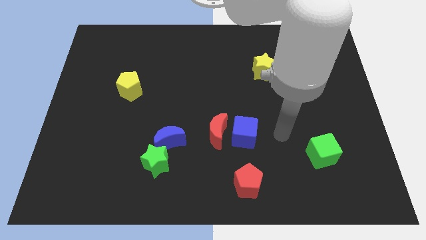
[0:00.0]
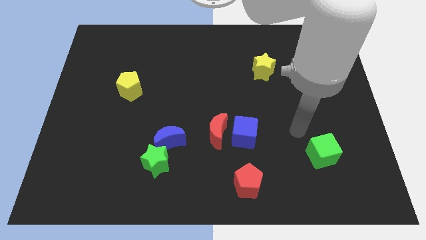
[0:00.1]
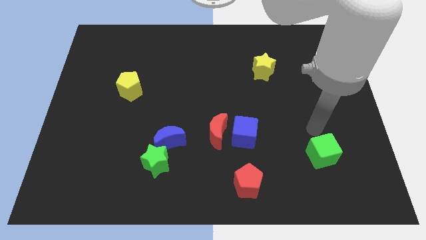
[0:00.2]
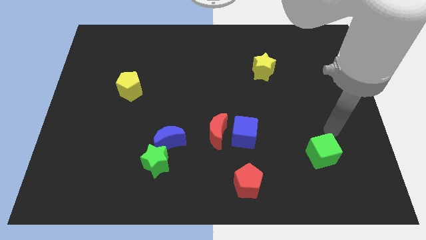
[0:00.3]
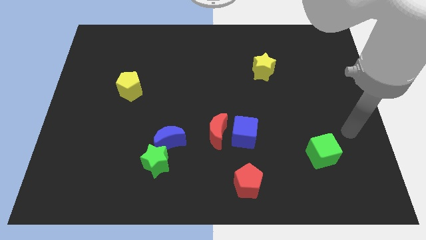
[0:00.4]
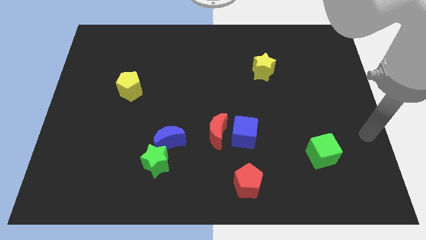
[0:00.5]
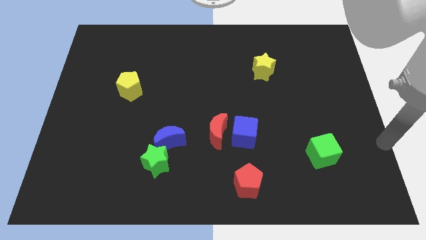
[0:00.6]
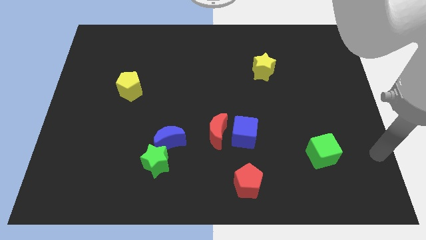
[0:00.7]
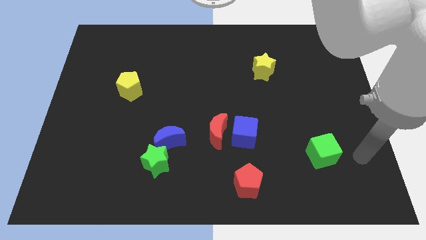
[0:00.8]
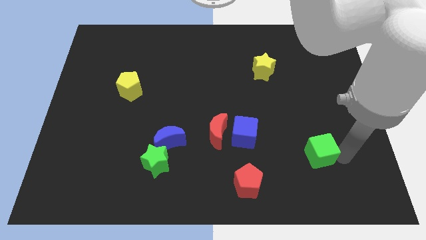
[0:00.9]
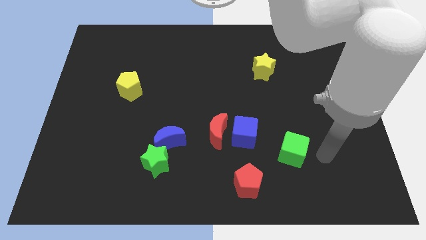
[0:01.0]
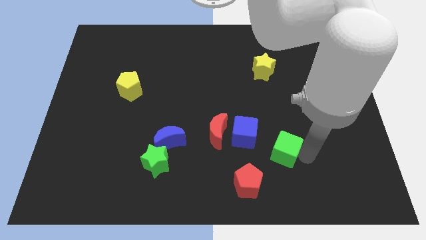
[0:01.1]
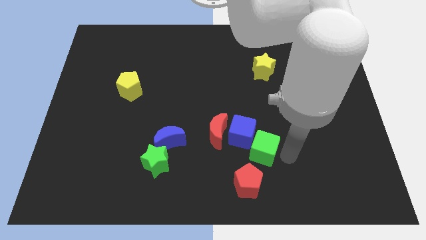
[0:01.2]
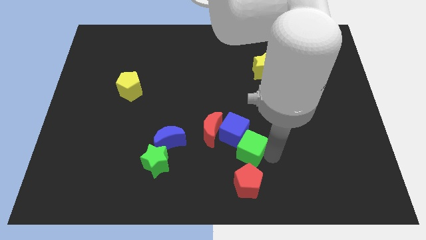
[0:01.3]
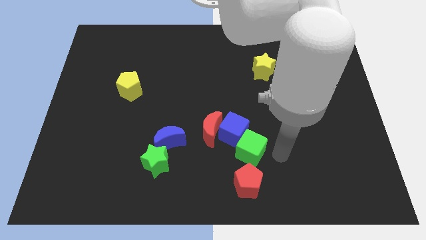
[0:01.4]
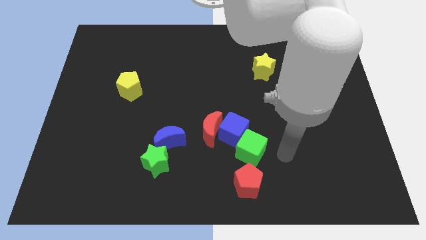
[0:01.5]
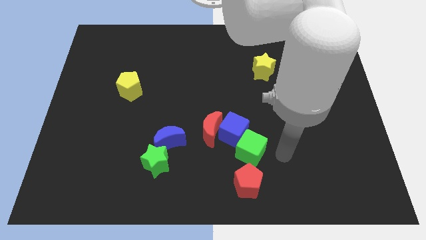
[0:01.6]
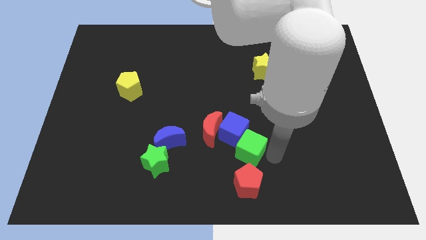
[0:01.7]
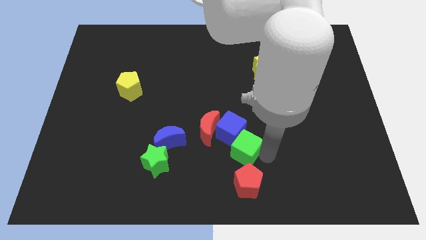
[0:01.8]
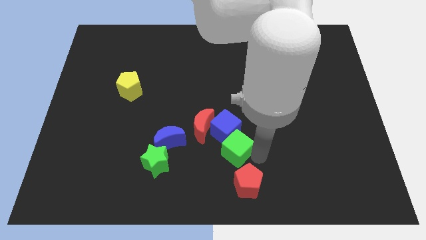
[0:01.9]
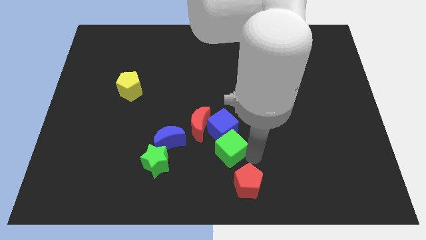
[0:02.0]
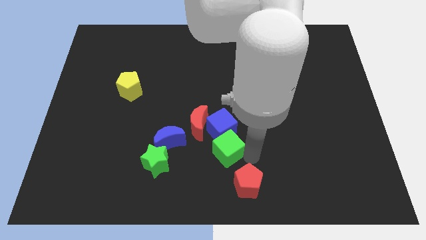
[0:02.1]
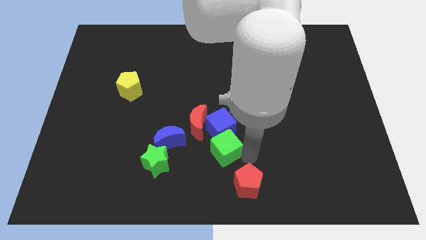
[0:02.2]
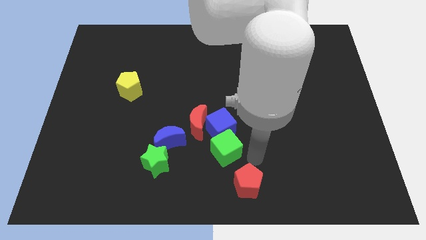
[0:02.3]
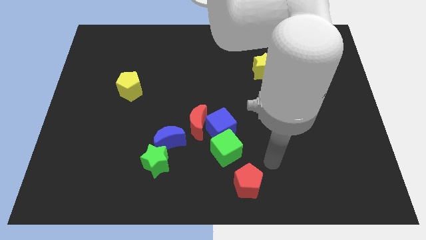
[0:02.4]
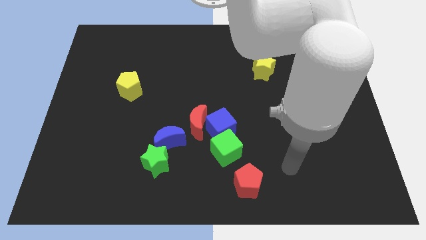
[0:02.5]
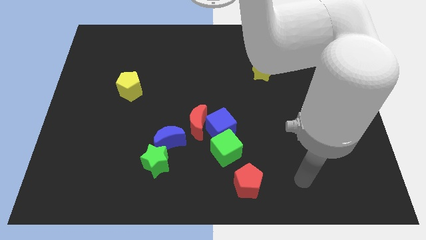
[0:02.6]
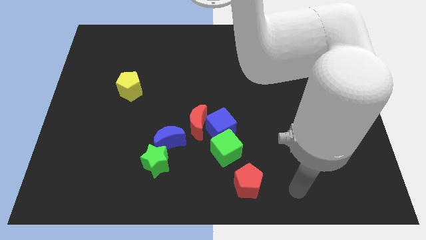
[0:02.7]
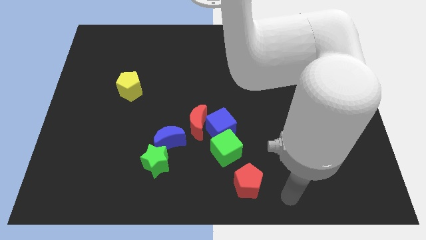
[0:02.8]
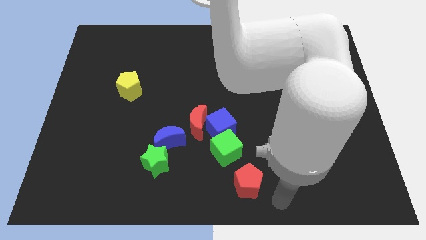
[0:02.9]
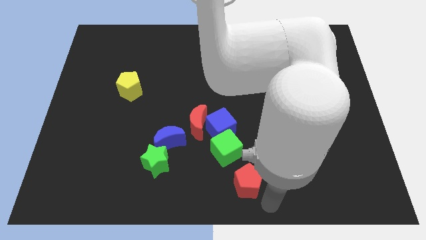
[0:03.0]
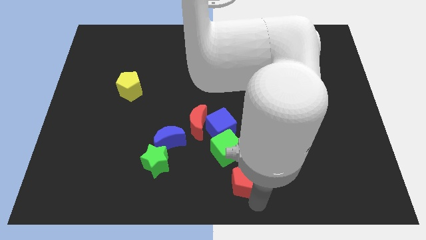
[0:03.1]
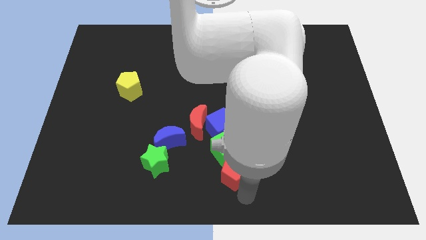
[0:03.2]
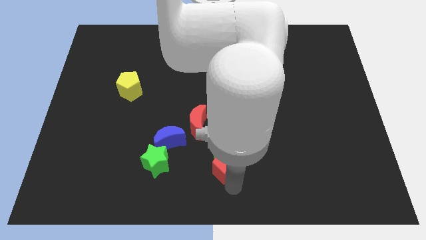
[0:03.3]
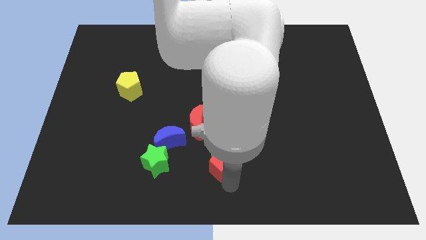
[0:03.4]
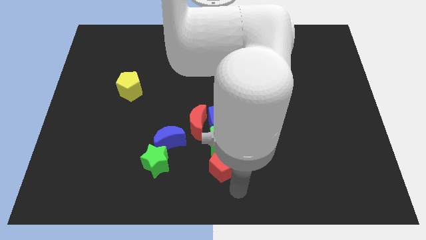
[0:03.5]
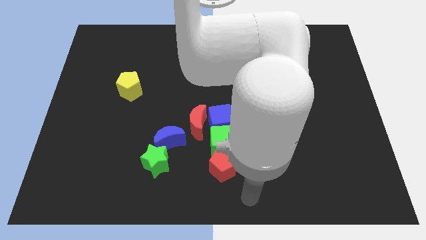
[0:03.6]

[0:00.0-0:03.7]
move the green cube and red pentagon vertically to the bottom side of the blue cube

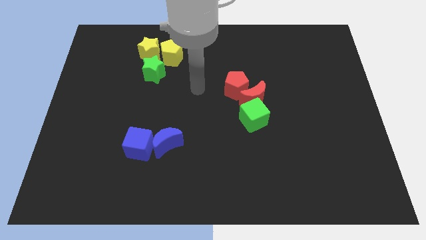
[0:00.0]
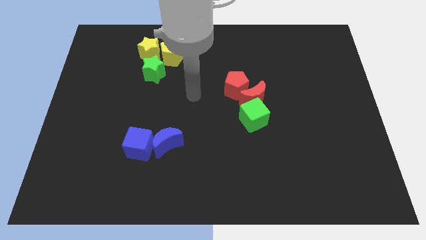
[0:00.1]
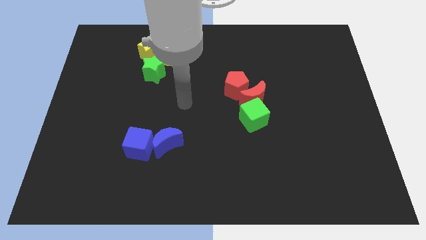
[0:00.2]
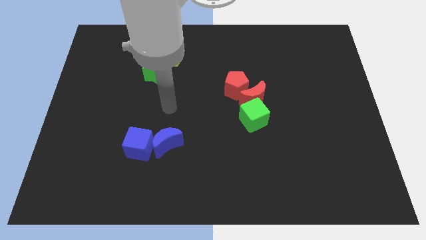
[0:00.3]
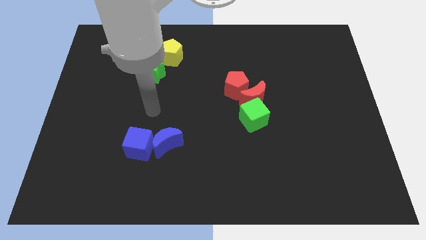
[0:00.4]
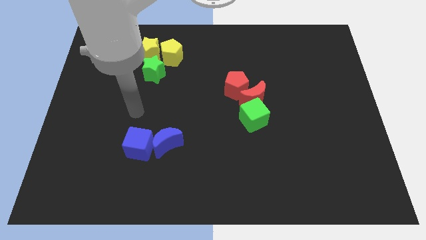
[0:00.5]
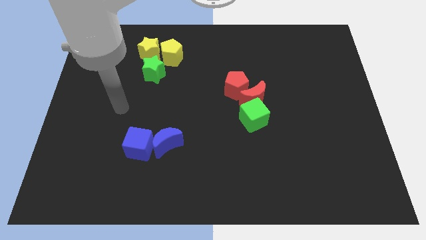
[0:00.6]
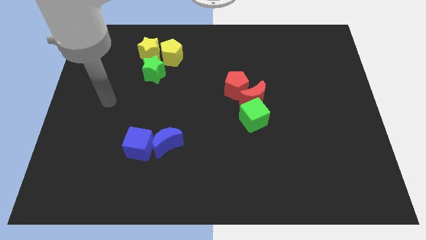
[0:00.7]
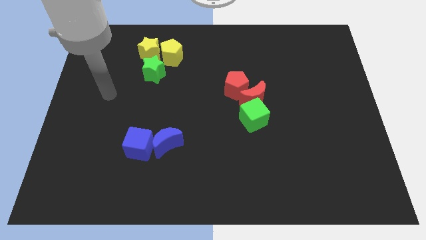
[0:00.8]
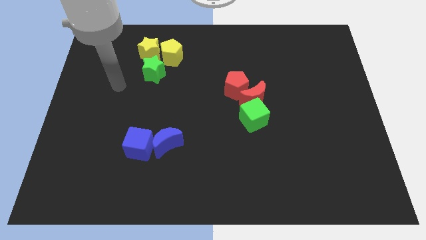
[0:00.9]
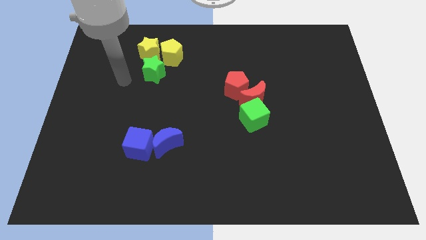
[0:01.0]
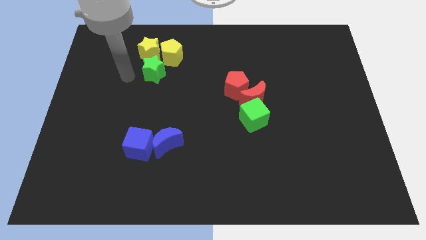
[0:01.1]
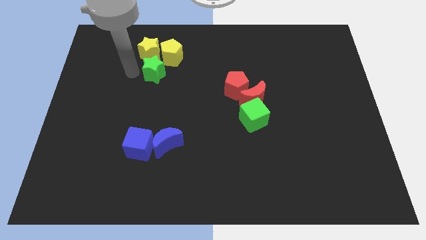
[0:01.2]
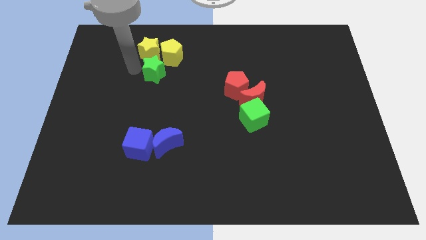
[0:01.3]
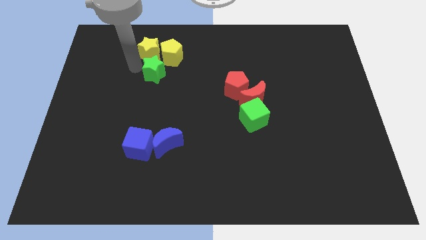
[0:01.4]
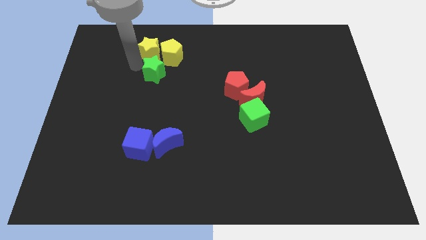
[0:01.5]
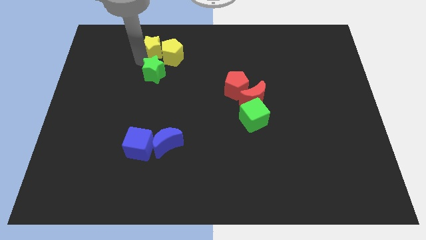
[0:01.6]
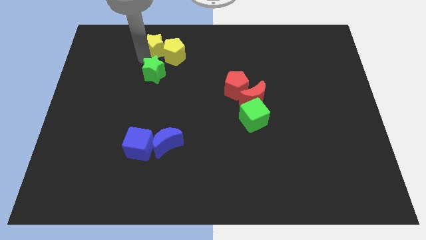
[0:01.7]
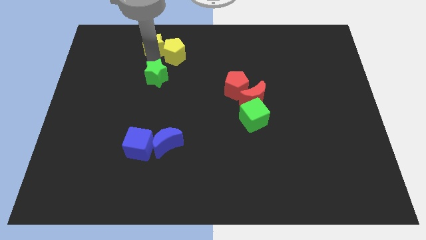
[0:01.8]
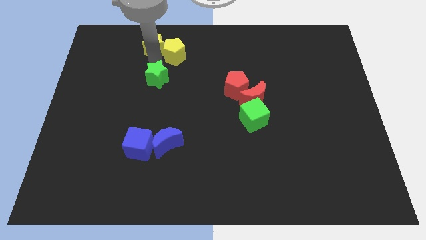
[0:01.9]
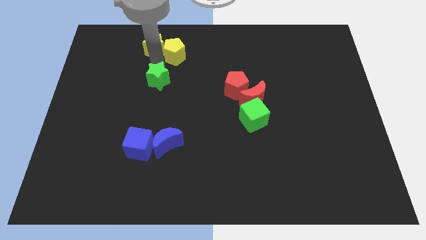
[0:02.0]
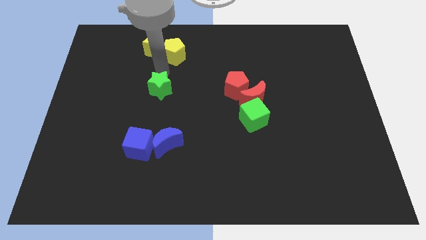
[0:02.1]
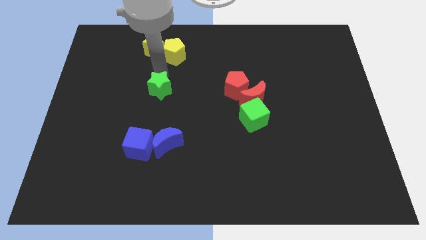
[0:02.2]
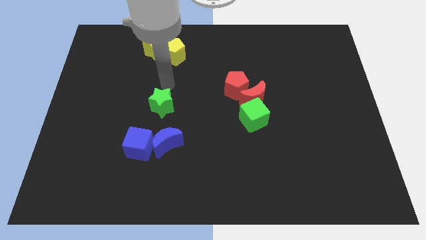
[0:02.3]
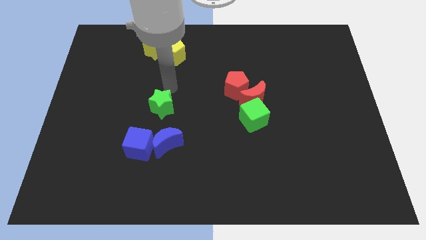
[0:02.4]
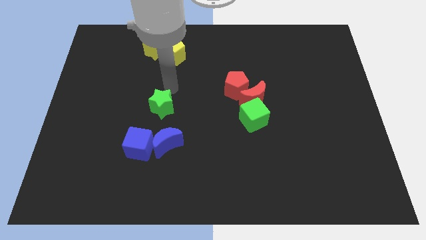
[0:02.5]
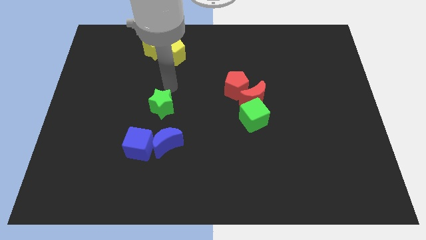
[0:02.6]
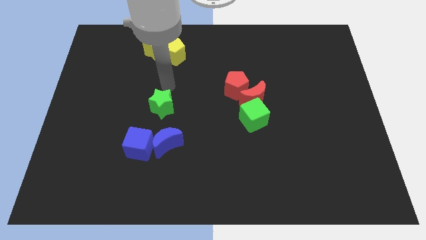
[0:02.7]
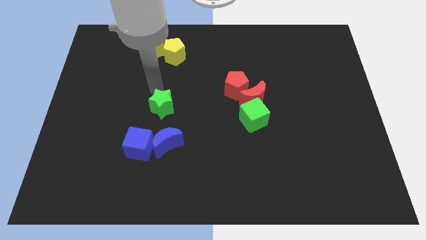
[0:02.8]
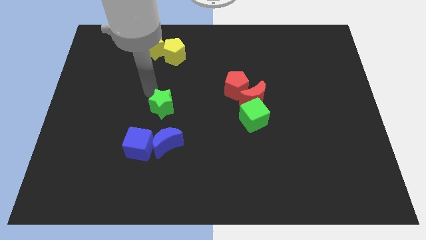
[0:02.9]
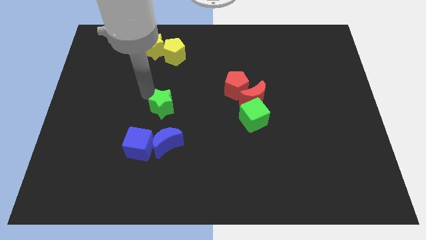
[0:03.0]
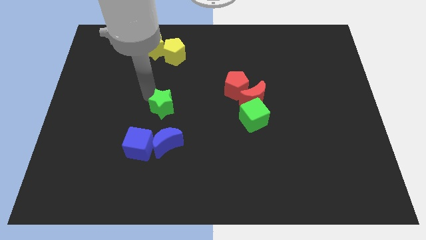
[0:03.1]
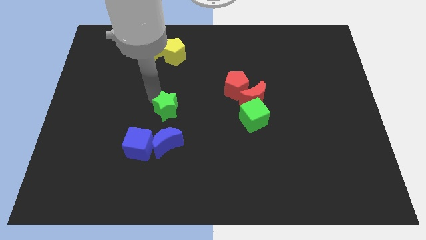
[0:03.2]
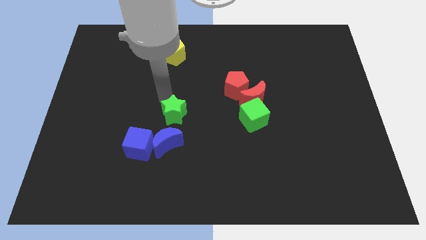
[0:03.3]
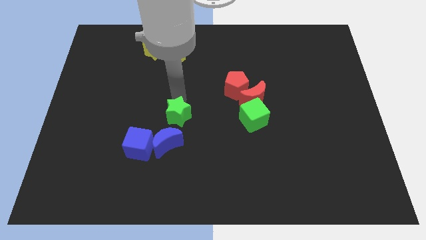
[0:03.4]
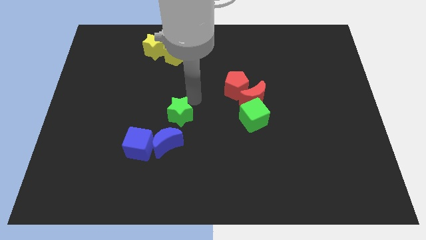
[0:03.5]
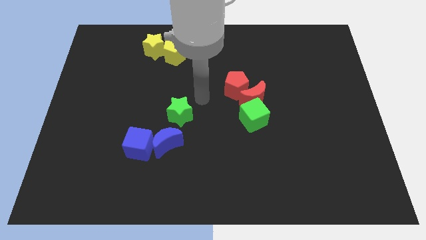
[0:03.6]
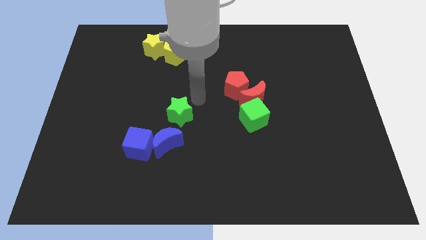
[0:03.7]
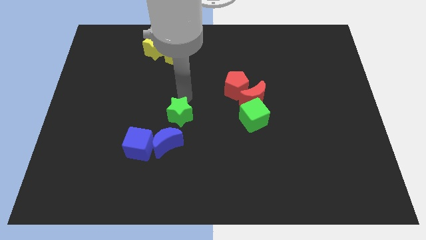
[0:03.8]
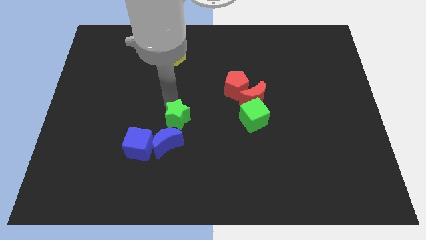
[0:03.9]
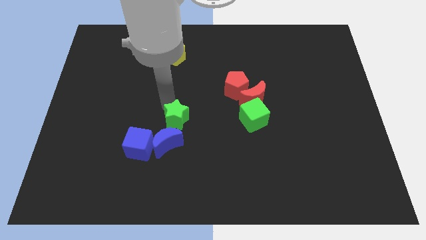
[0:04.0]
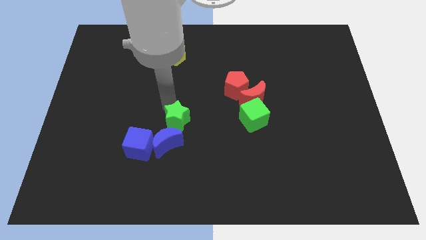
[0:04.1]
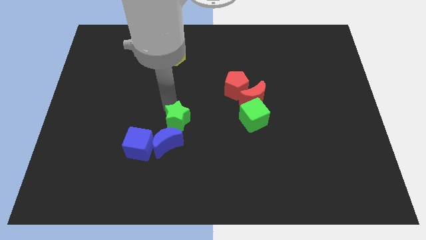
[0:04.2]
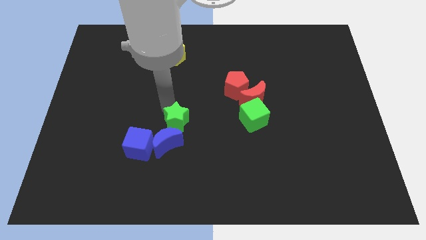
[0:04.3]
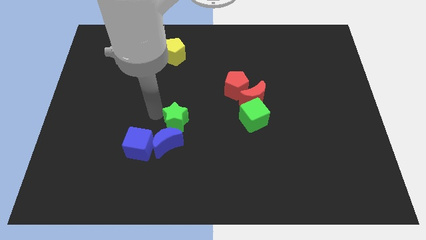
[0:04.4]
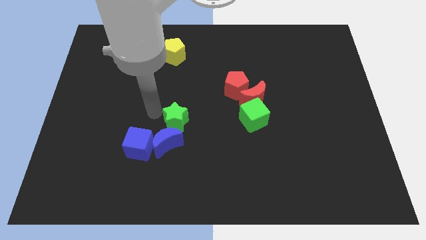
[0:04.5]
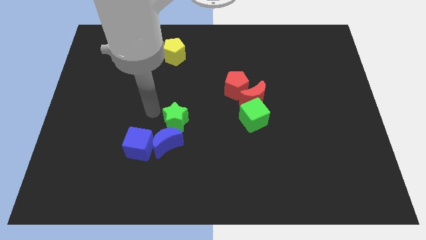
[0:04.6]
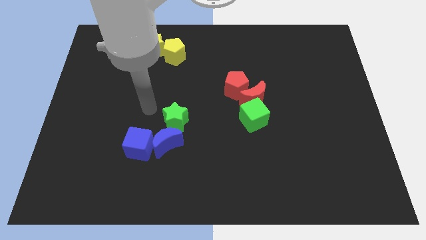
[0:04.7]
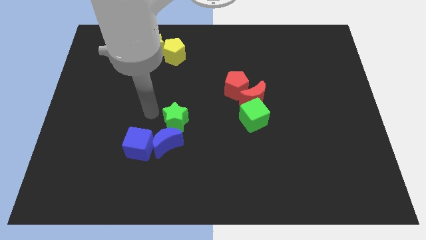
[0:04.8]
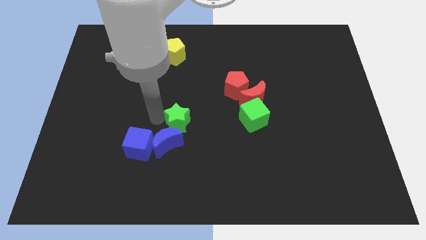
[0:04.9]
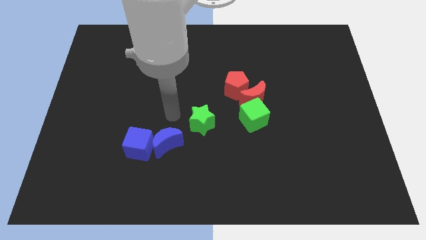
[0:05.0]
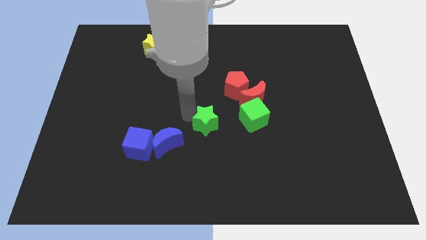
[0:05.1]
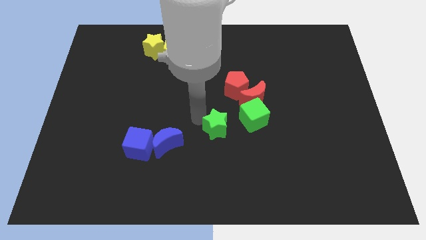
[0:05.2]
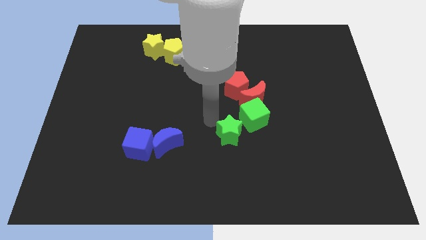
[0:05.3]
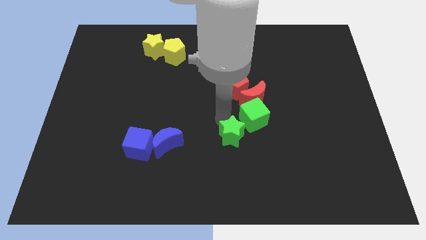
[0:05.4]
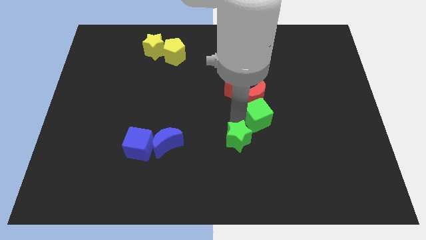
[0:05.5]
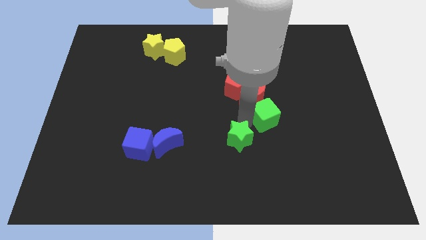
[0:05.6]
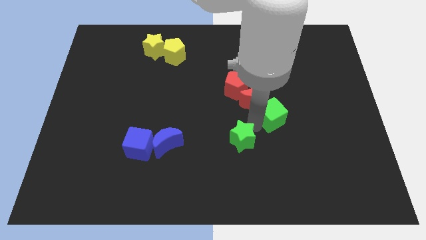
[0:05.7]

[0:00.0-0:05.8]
place the green star below the red pentagon
